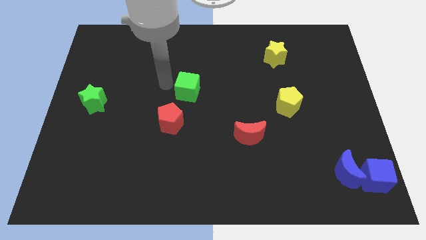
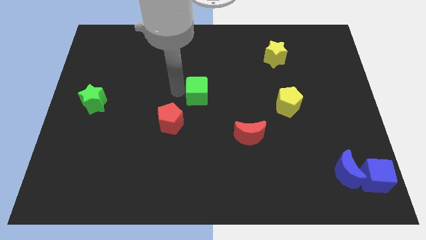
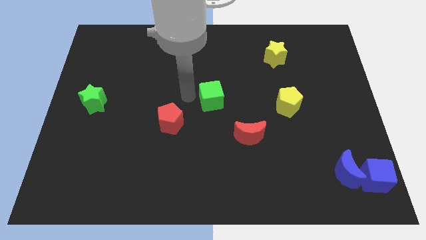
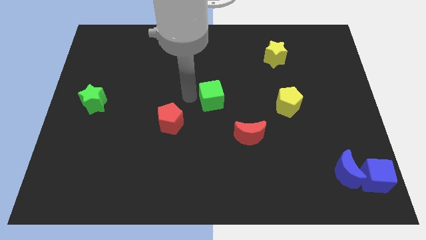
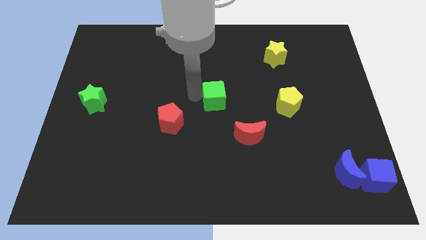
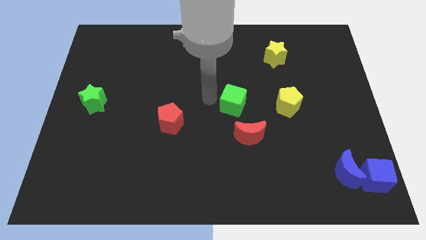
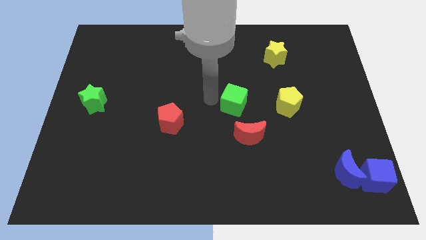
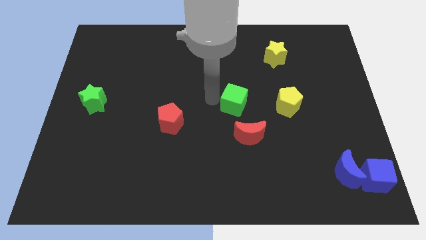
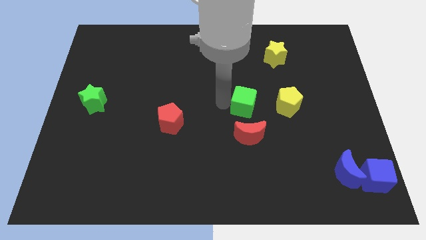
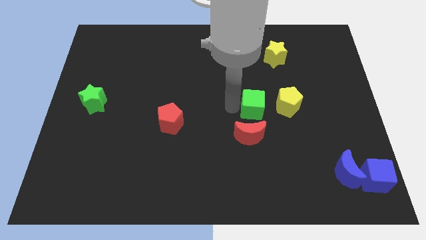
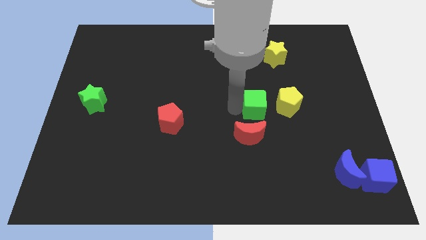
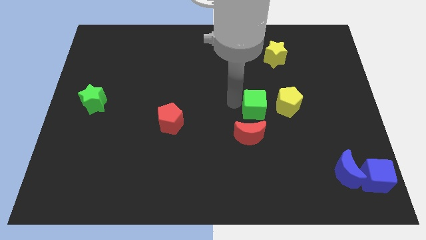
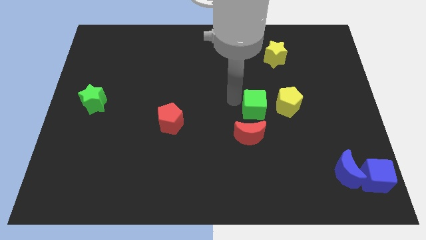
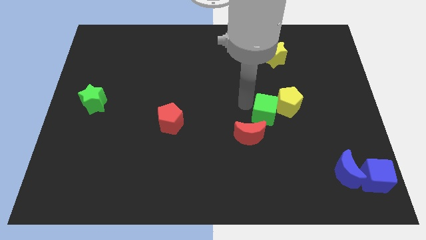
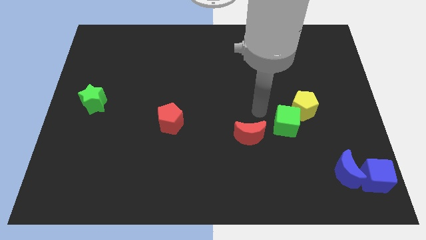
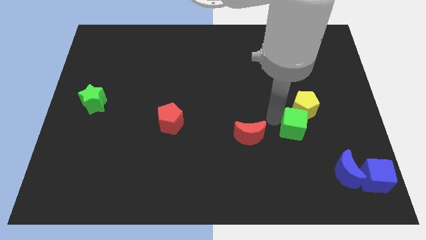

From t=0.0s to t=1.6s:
push the green cube into the yellow pentagon

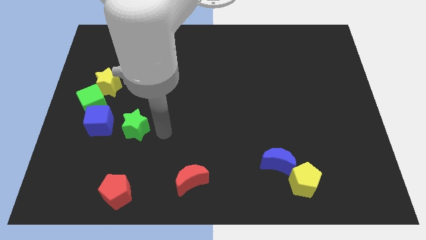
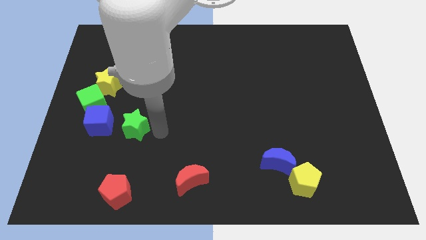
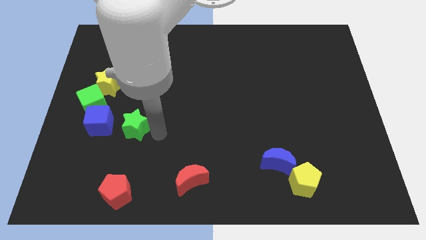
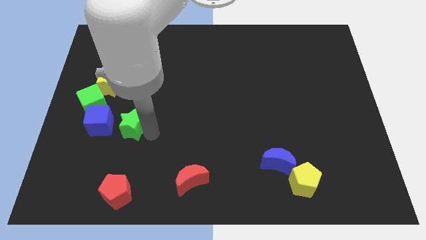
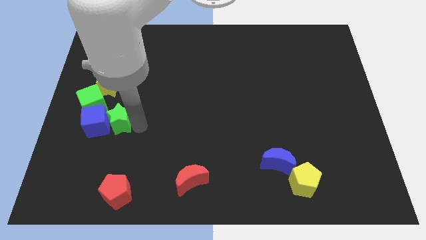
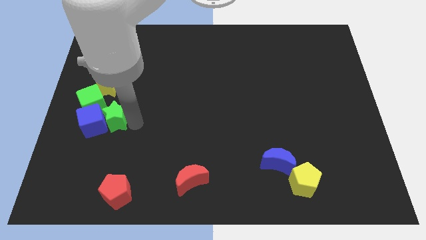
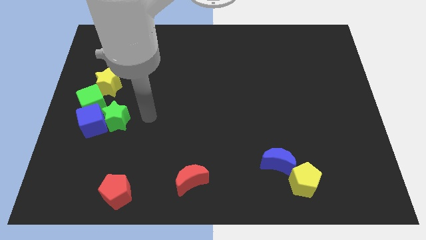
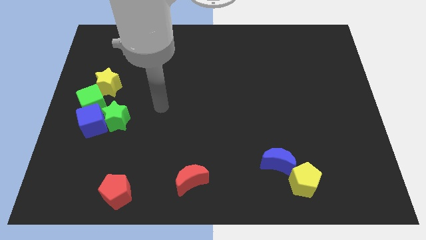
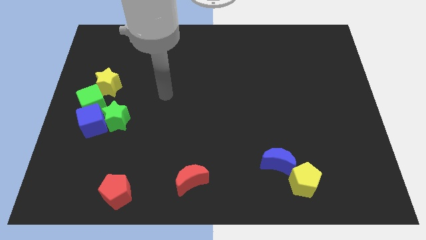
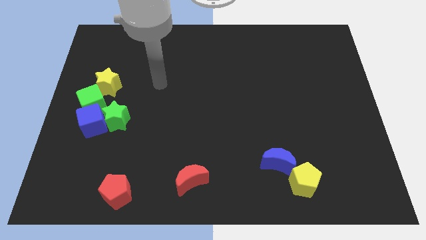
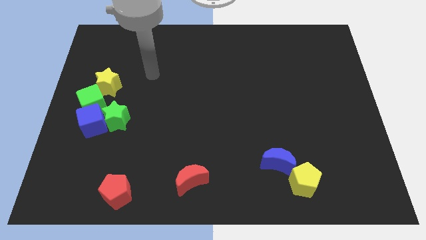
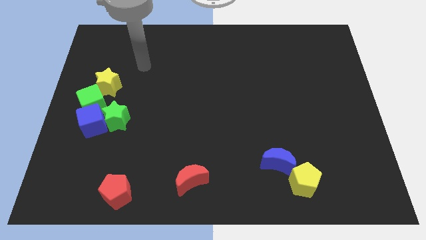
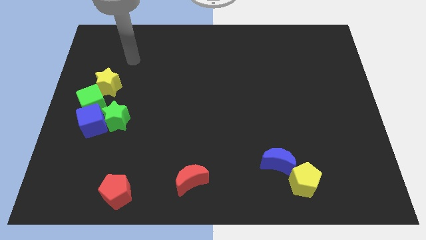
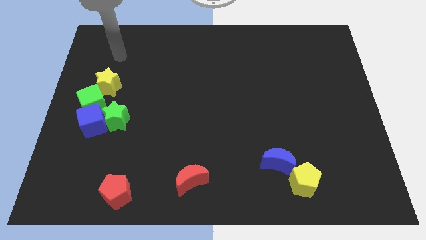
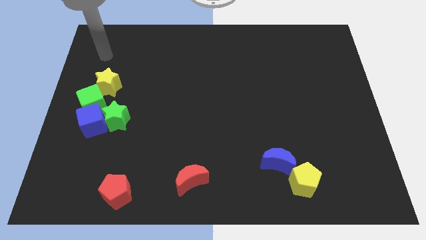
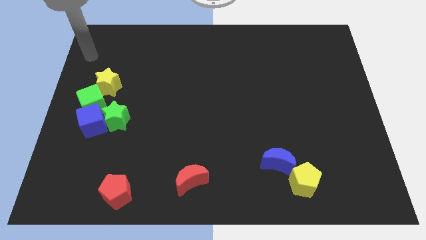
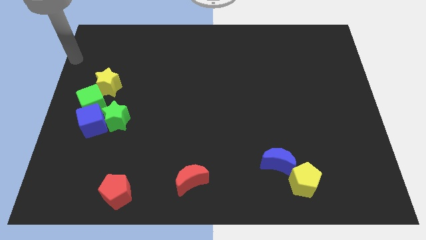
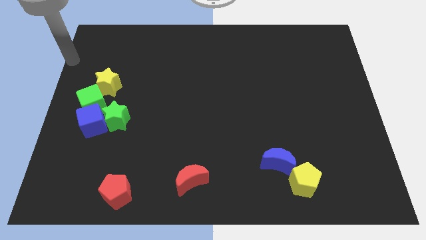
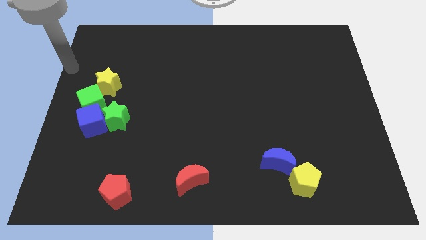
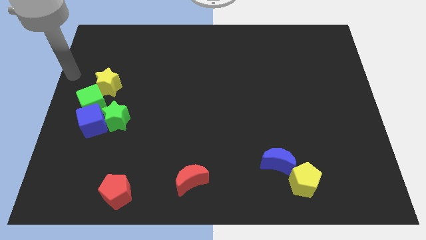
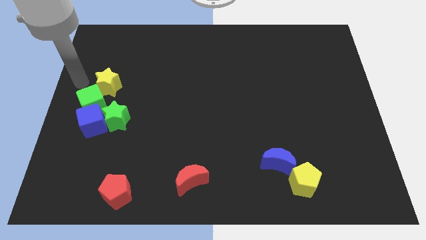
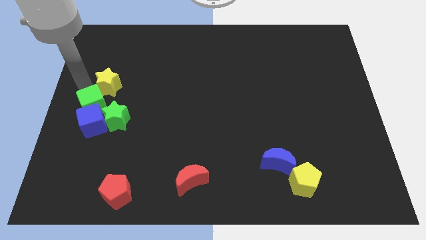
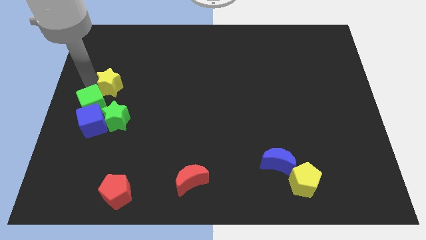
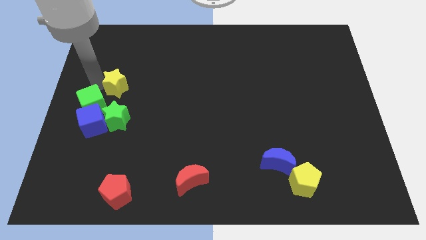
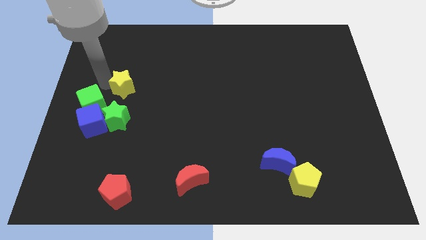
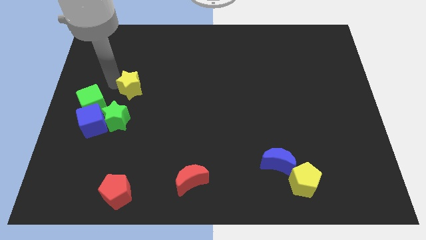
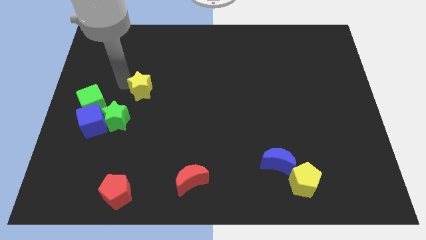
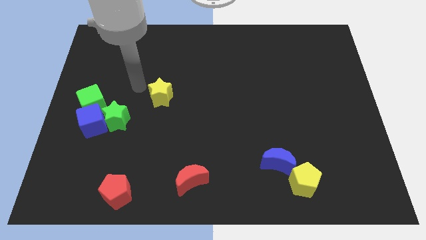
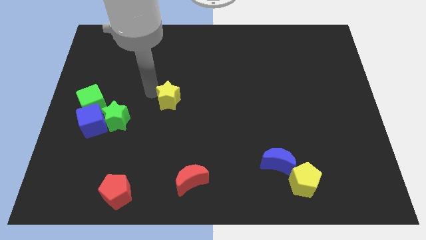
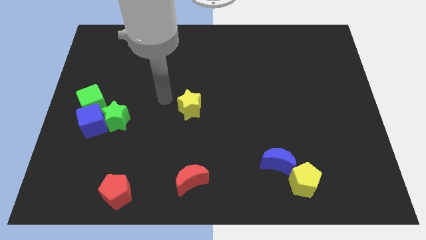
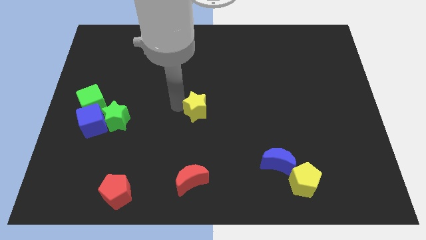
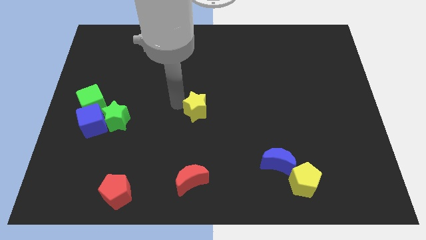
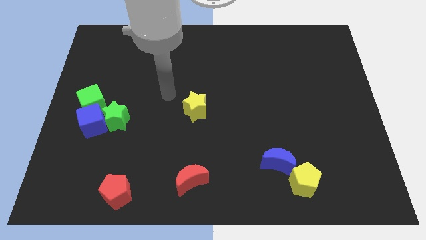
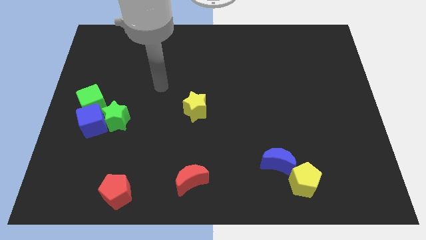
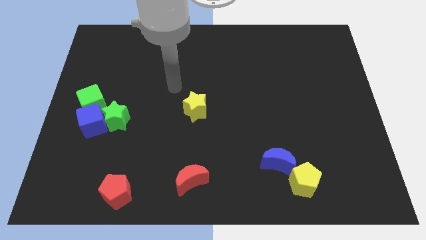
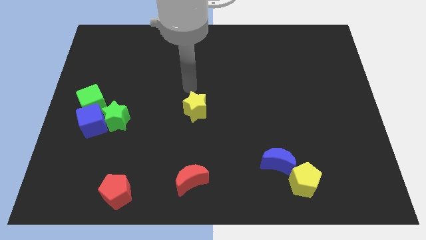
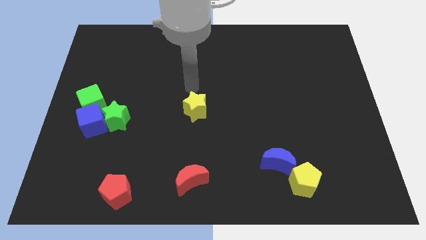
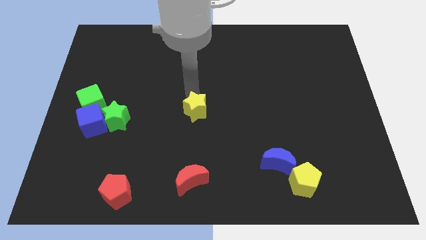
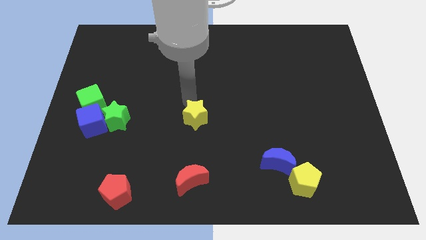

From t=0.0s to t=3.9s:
place yellow star above the red moon

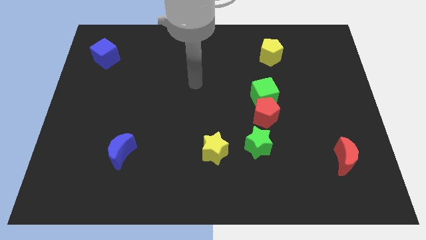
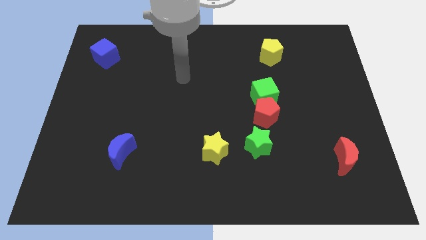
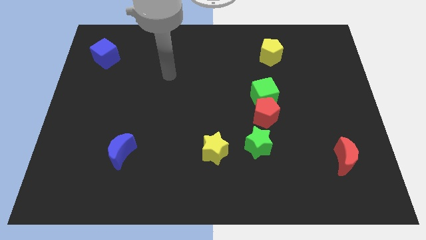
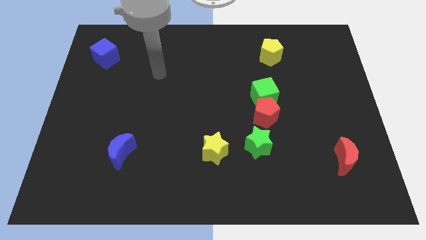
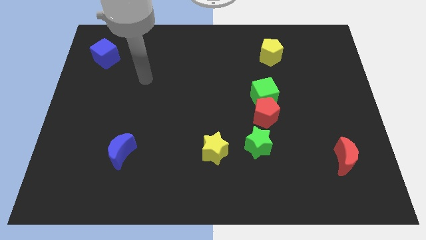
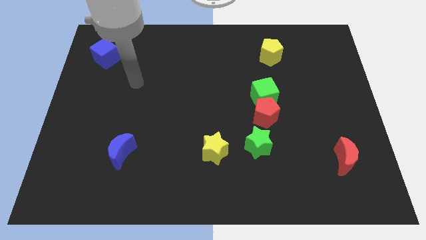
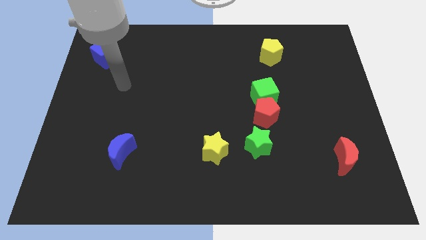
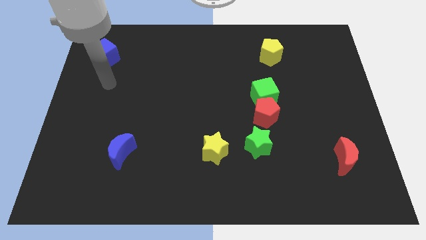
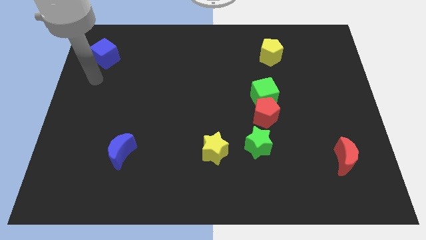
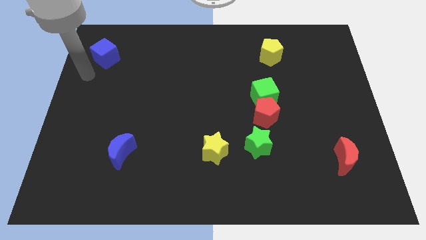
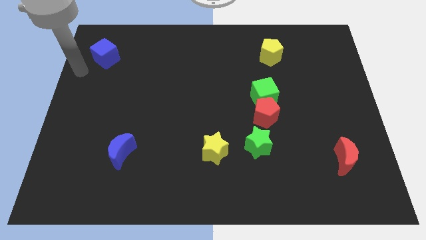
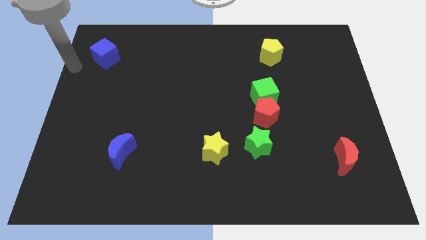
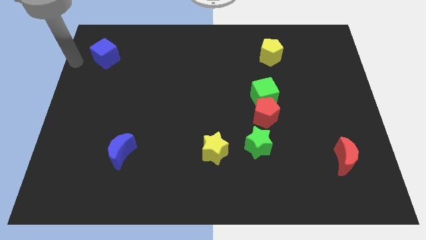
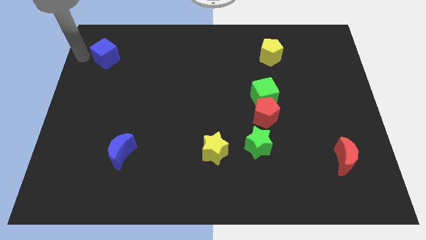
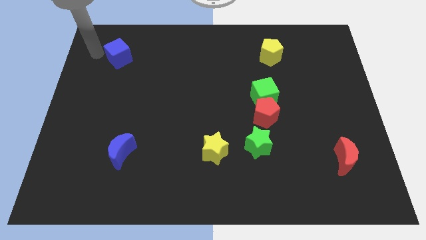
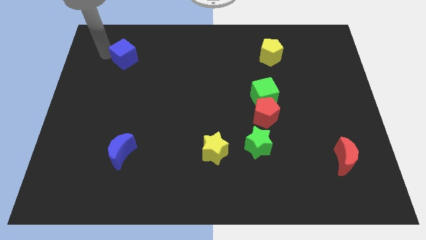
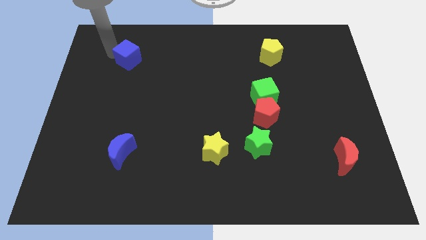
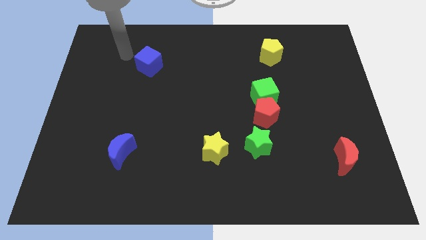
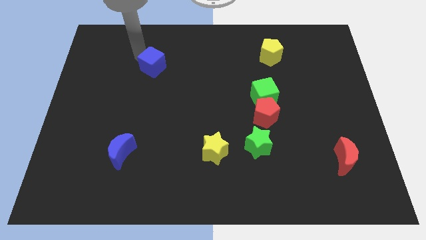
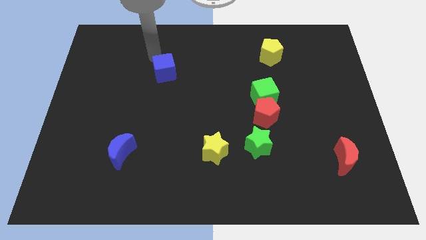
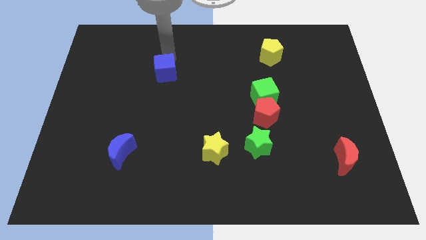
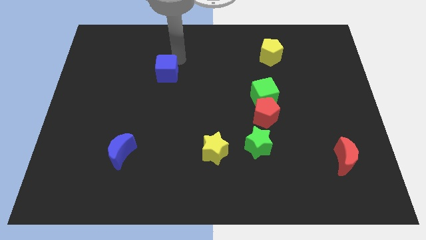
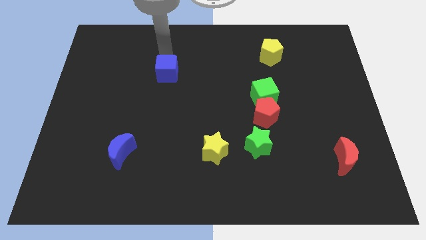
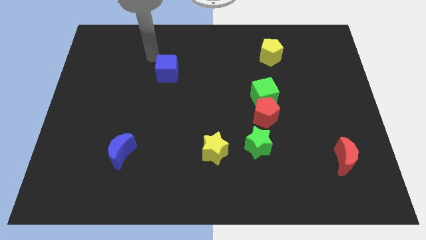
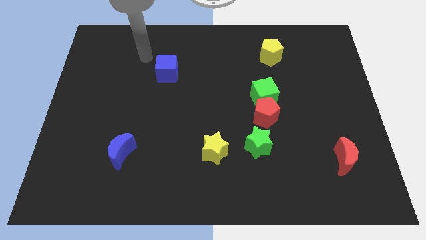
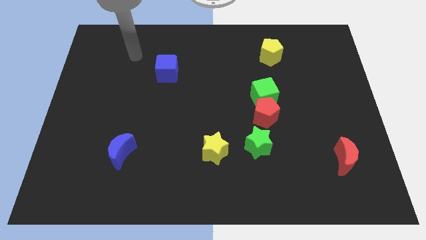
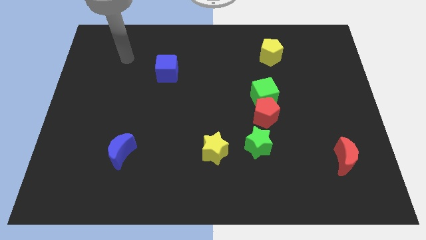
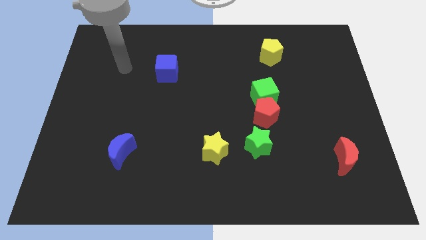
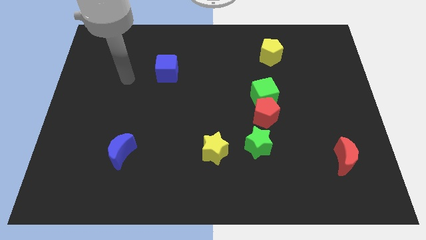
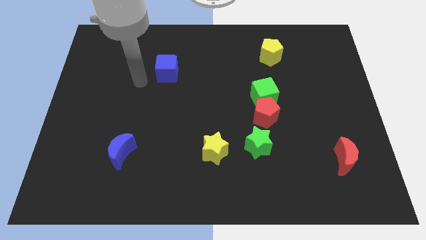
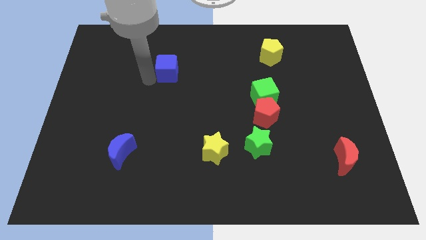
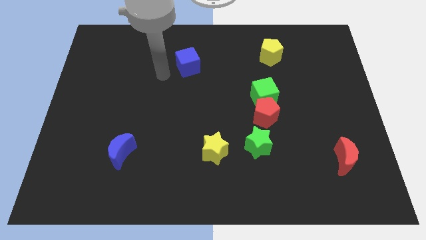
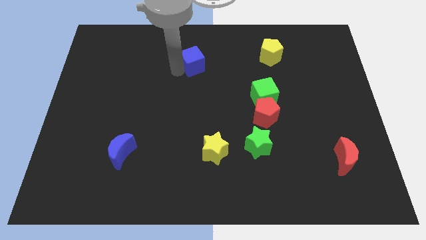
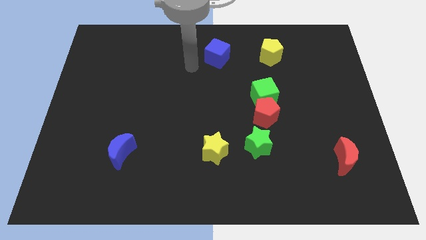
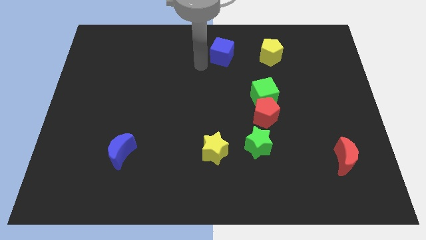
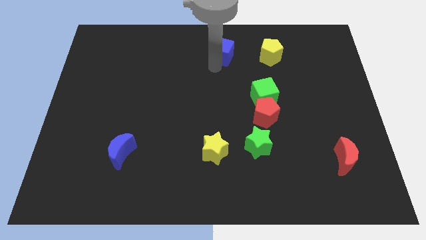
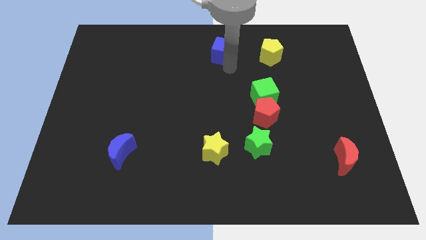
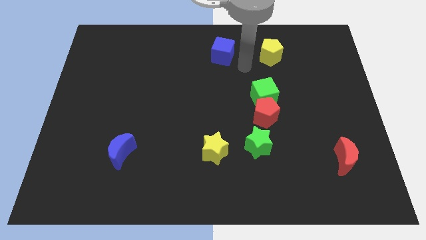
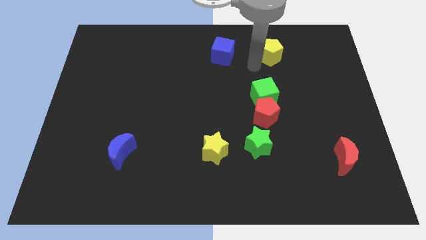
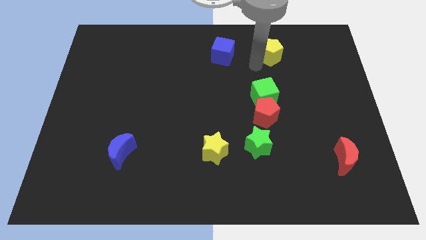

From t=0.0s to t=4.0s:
push the blue cube vertically to yellow pentagon
